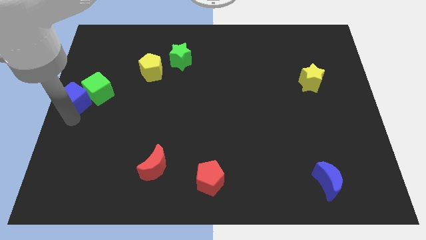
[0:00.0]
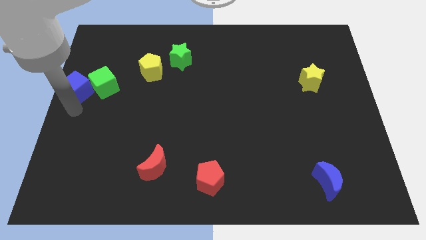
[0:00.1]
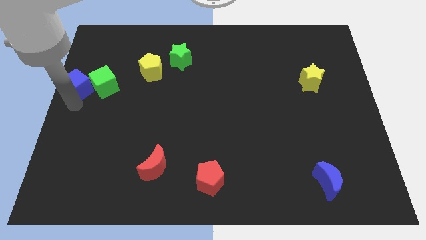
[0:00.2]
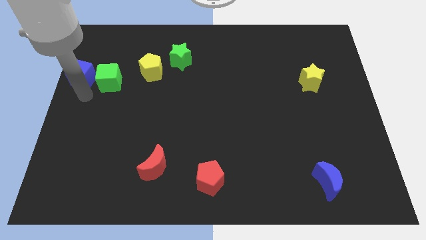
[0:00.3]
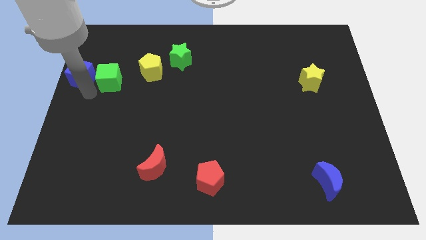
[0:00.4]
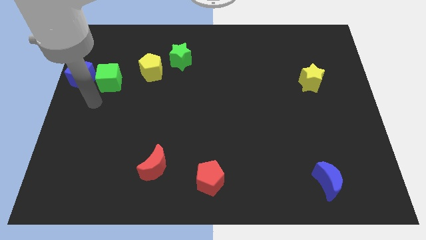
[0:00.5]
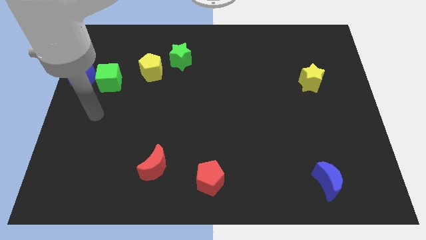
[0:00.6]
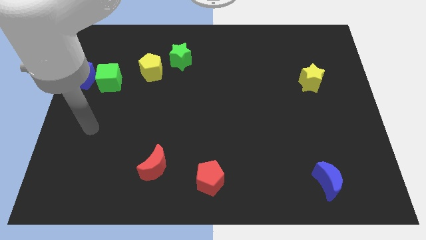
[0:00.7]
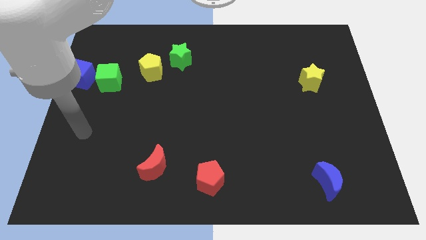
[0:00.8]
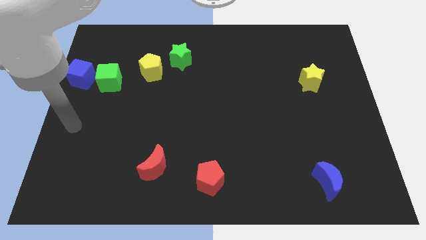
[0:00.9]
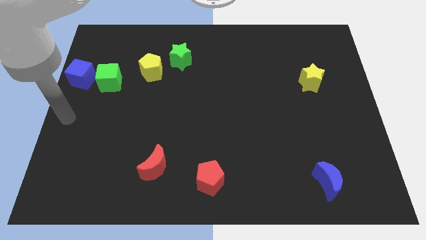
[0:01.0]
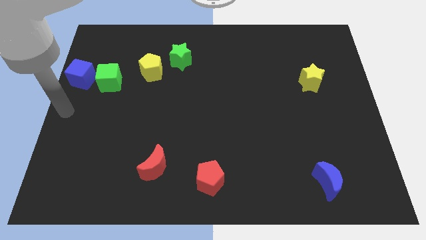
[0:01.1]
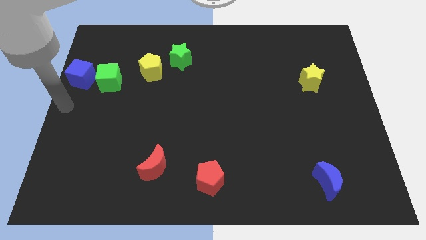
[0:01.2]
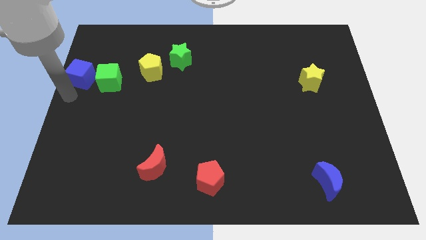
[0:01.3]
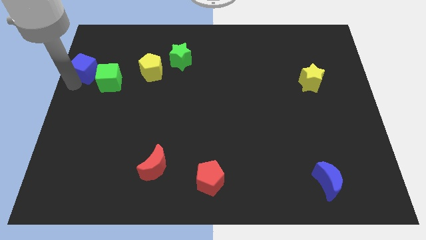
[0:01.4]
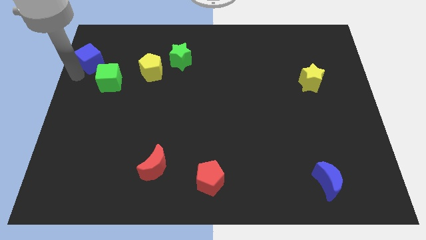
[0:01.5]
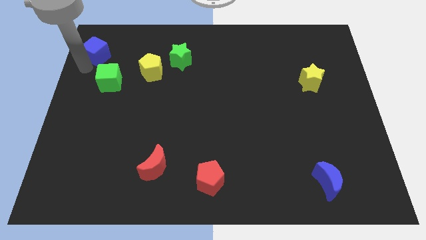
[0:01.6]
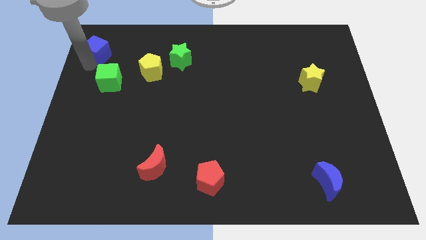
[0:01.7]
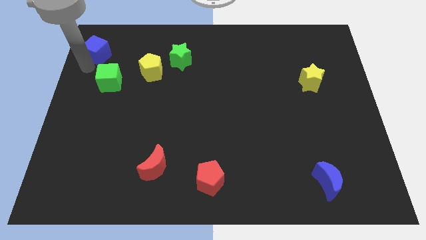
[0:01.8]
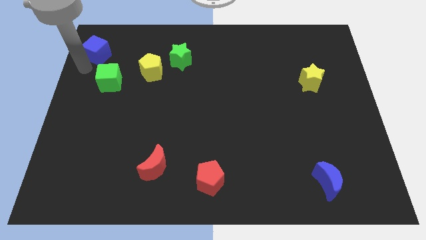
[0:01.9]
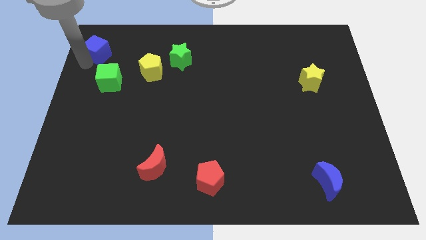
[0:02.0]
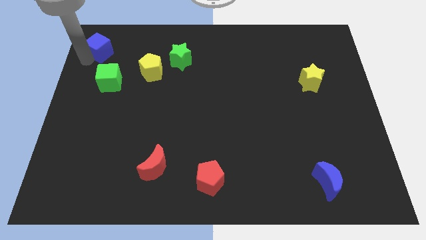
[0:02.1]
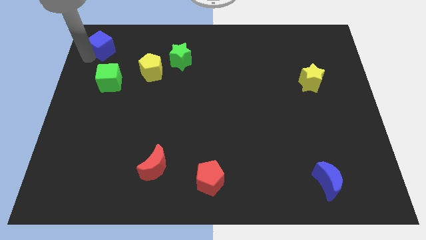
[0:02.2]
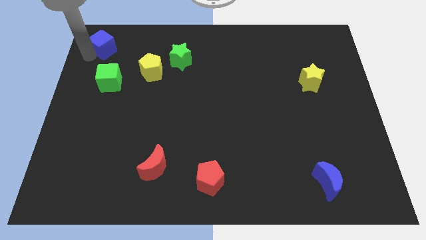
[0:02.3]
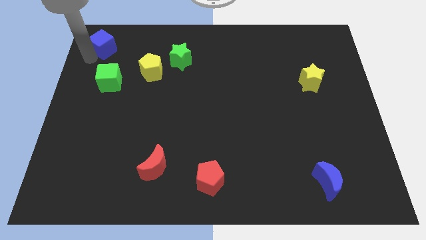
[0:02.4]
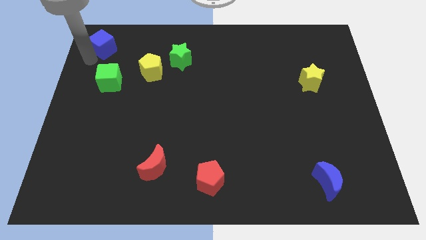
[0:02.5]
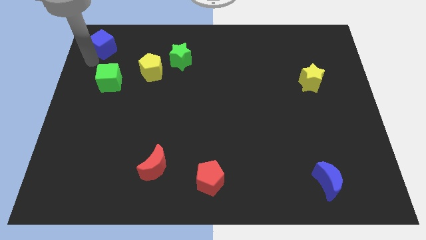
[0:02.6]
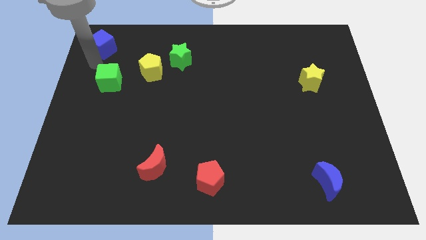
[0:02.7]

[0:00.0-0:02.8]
drag the blue cube to the top left

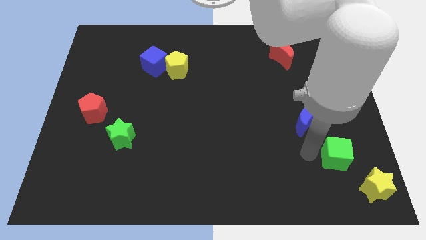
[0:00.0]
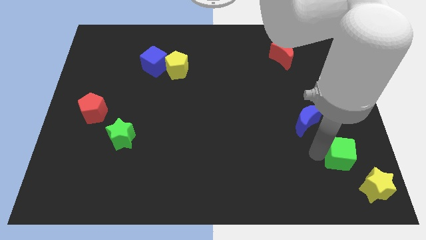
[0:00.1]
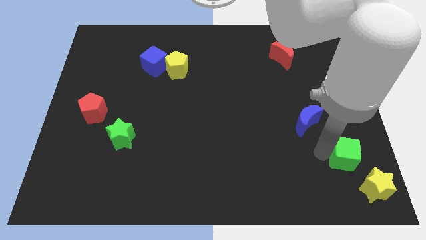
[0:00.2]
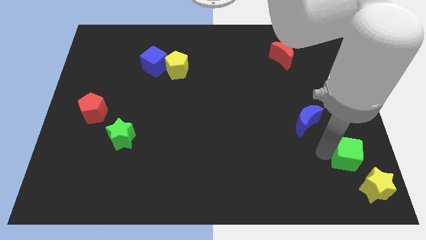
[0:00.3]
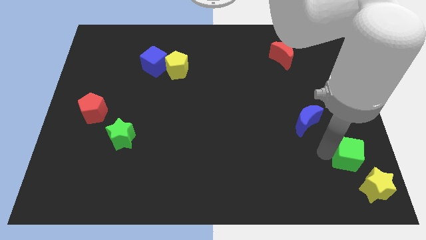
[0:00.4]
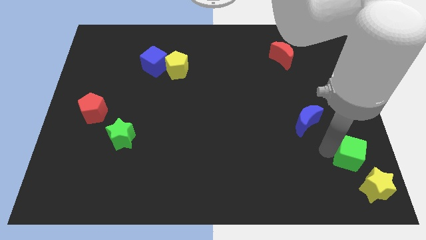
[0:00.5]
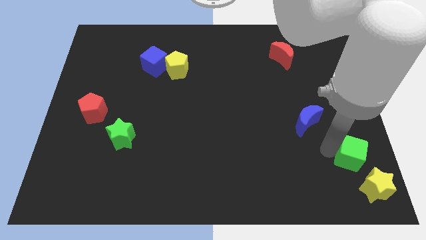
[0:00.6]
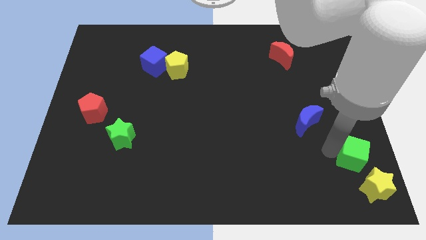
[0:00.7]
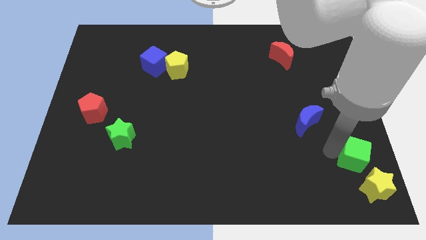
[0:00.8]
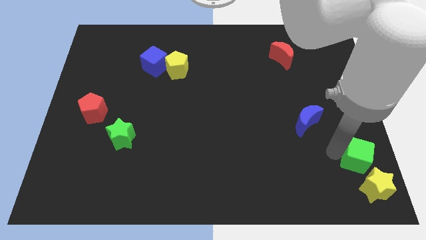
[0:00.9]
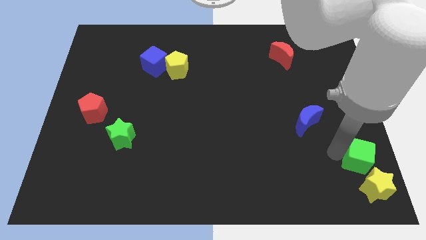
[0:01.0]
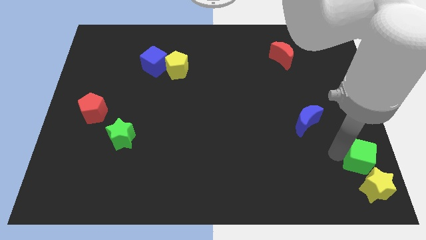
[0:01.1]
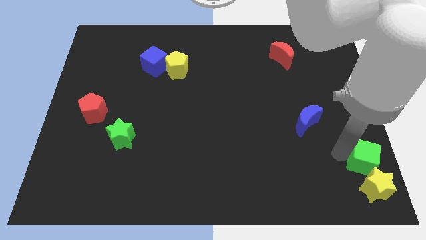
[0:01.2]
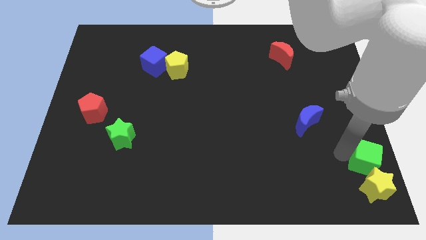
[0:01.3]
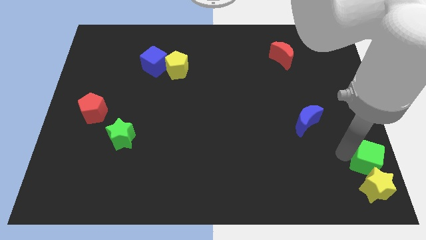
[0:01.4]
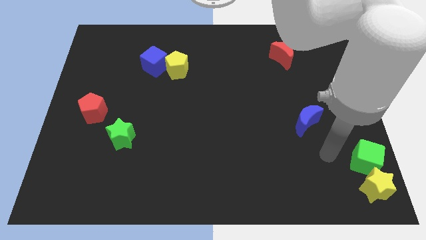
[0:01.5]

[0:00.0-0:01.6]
place green cube at the top of yellow star

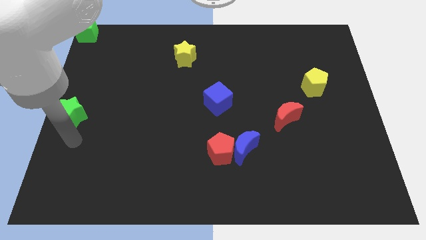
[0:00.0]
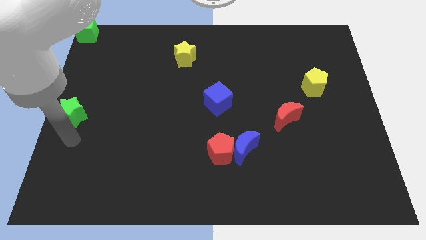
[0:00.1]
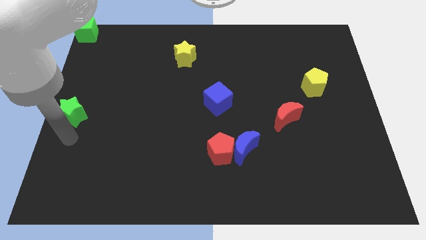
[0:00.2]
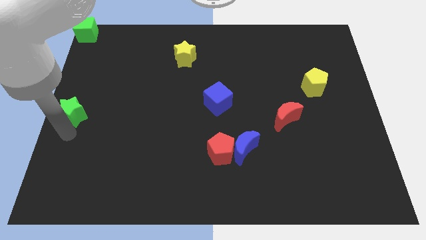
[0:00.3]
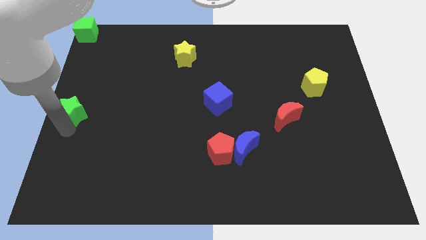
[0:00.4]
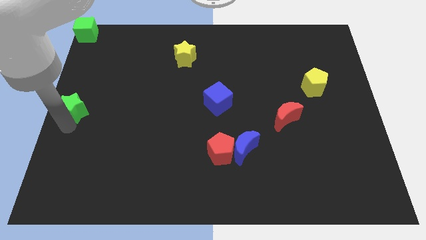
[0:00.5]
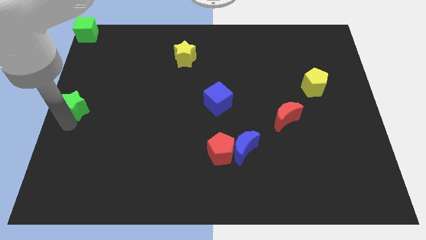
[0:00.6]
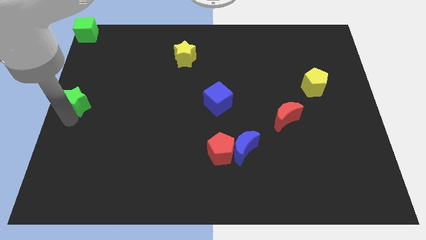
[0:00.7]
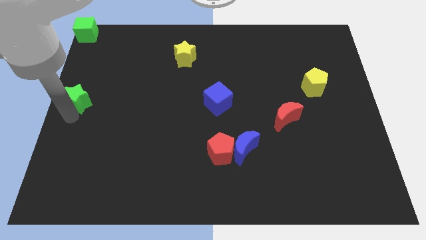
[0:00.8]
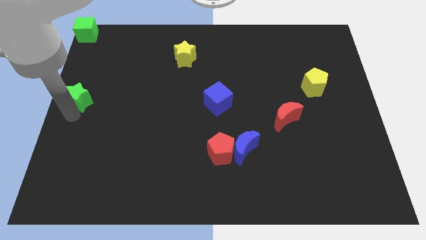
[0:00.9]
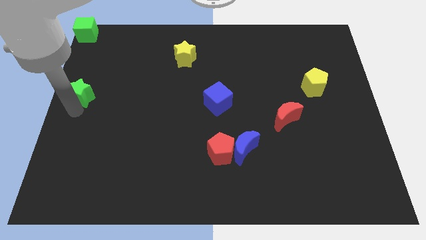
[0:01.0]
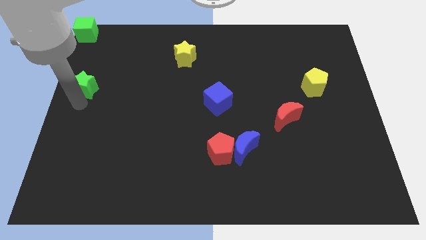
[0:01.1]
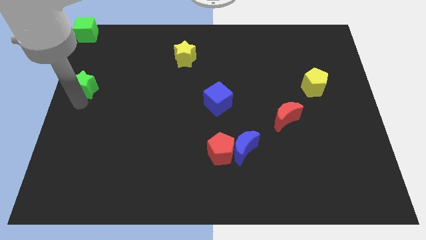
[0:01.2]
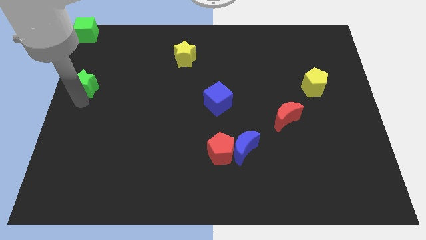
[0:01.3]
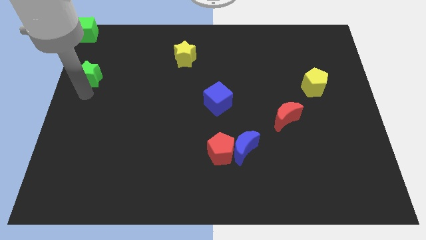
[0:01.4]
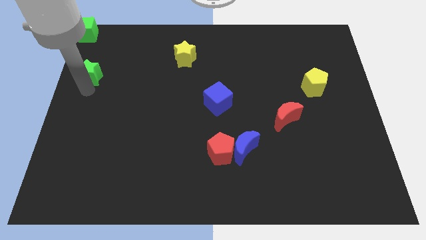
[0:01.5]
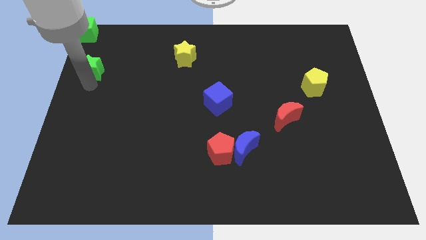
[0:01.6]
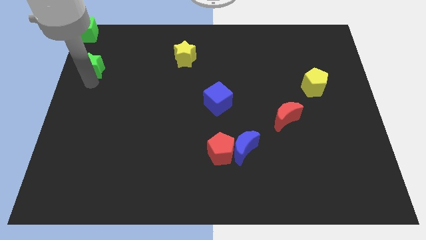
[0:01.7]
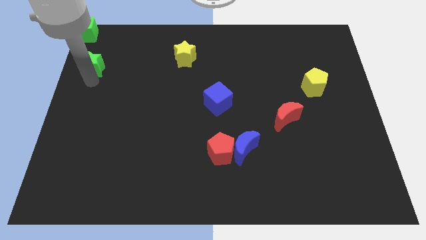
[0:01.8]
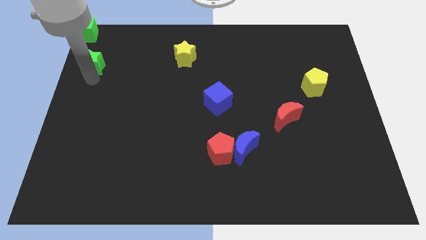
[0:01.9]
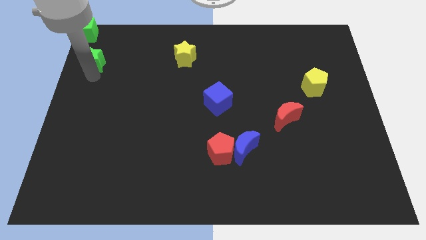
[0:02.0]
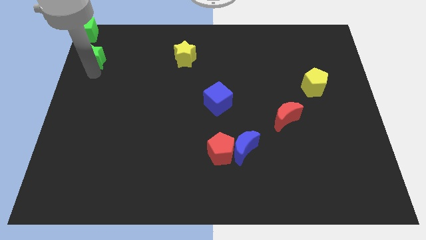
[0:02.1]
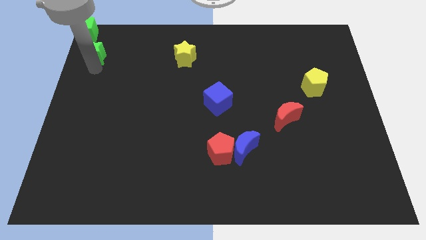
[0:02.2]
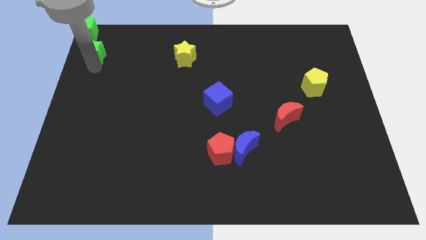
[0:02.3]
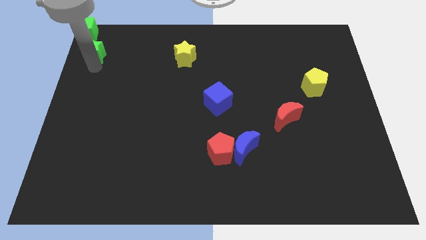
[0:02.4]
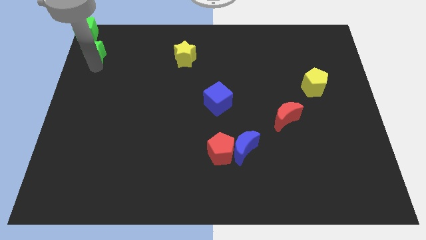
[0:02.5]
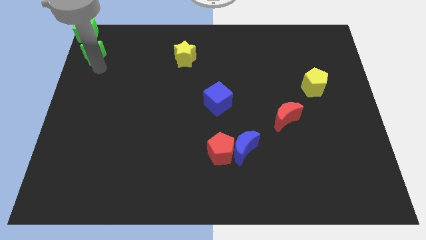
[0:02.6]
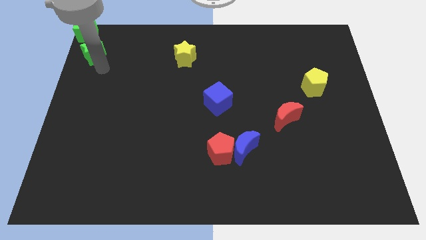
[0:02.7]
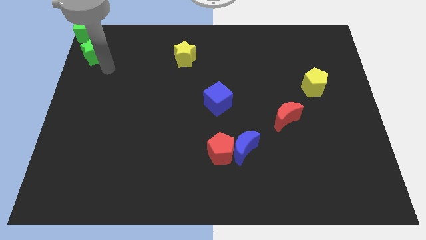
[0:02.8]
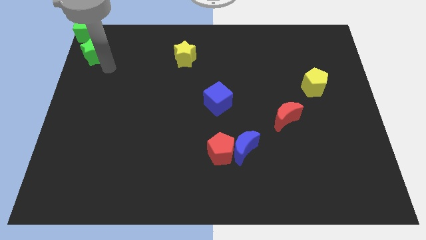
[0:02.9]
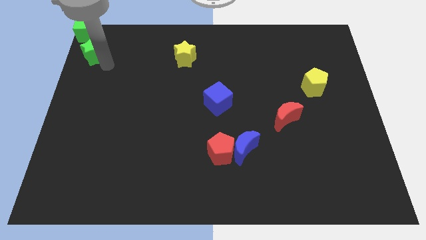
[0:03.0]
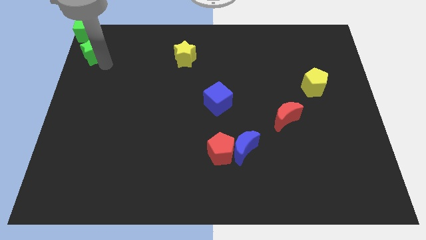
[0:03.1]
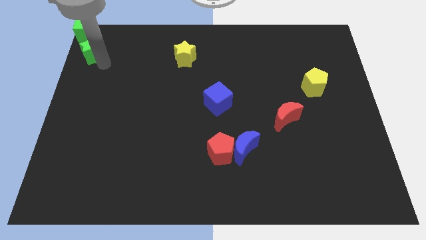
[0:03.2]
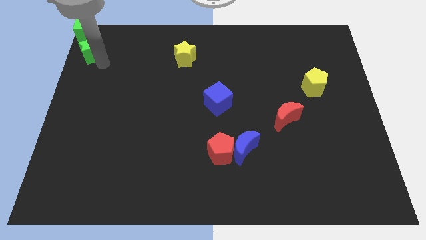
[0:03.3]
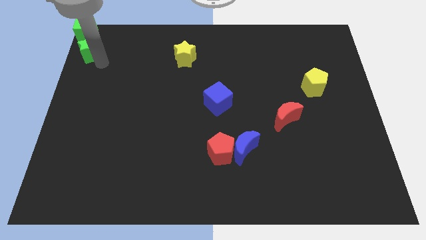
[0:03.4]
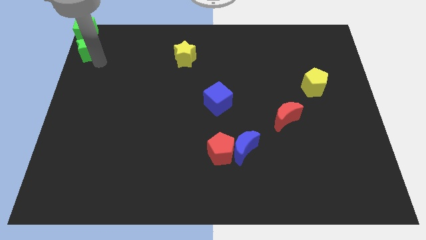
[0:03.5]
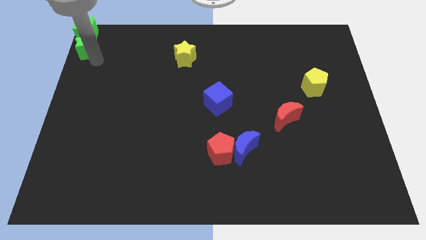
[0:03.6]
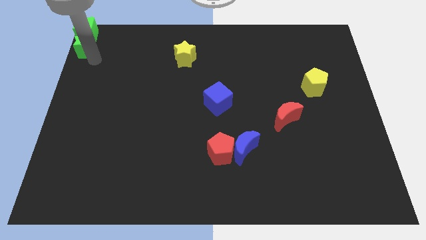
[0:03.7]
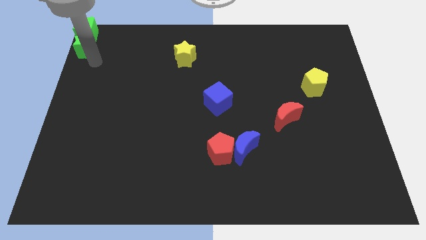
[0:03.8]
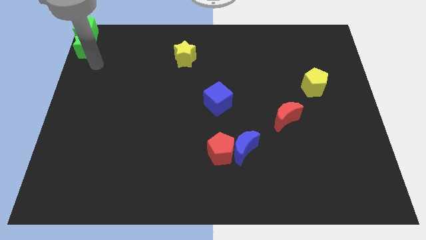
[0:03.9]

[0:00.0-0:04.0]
group up the green blocks at the top left corner

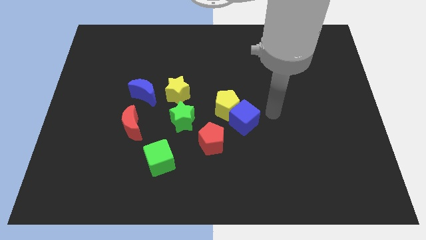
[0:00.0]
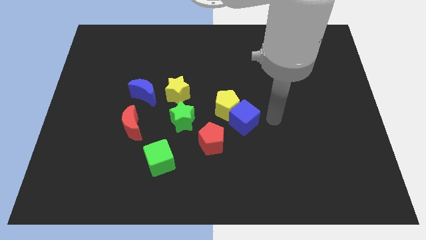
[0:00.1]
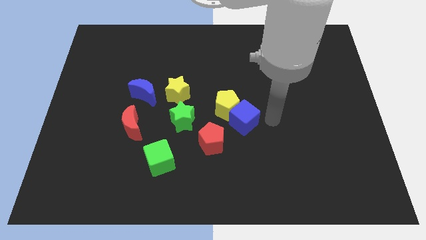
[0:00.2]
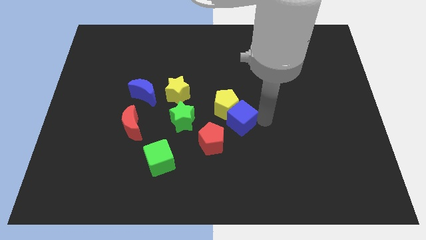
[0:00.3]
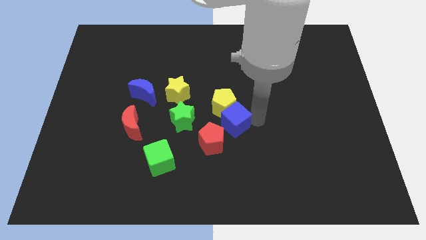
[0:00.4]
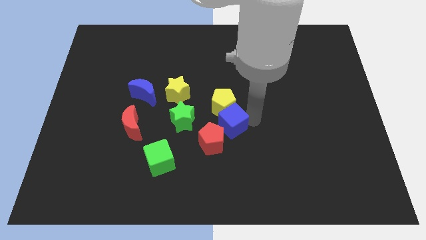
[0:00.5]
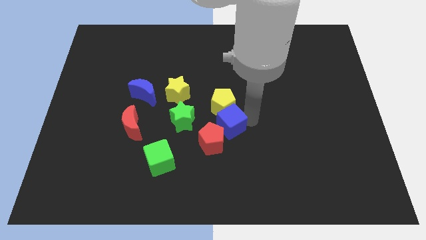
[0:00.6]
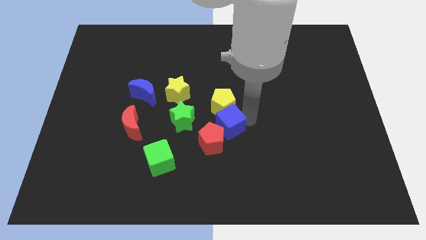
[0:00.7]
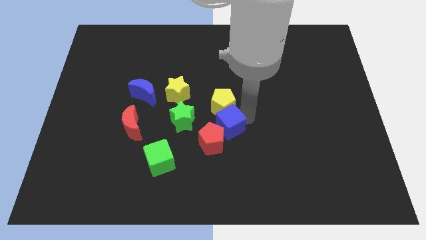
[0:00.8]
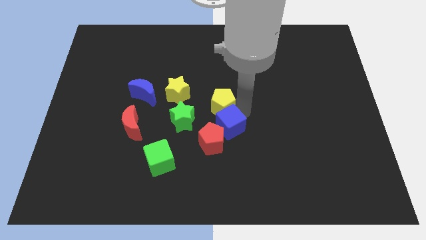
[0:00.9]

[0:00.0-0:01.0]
put the blue cube below the yellow pentagon
